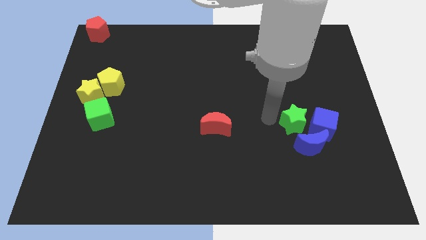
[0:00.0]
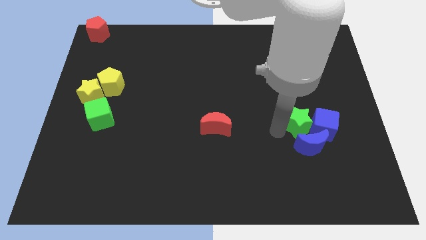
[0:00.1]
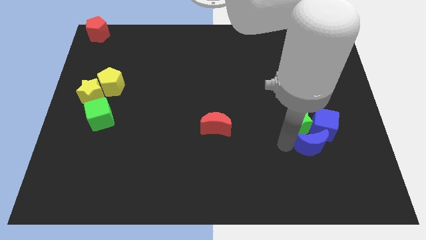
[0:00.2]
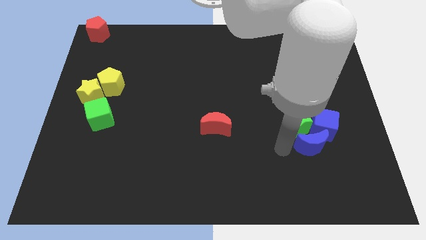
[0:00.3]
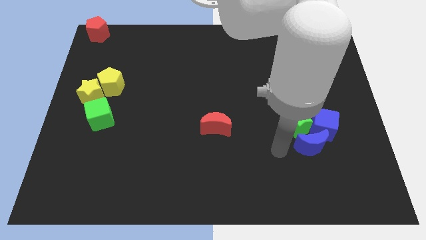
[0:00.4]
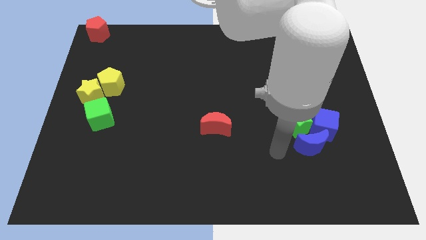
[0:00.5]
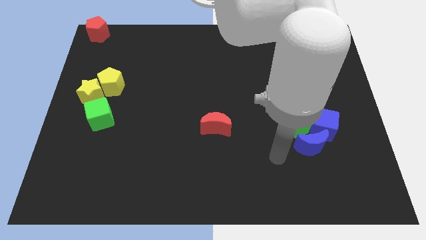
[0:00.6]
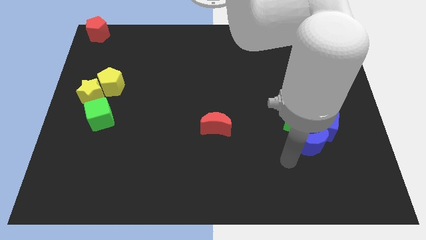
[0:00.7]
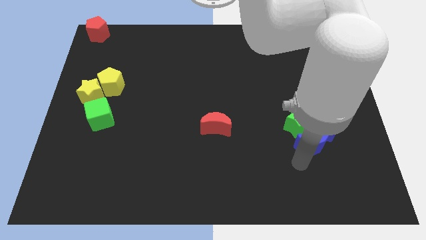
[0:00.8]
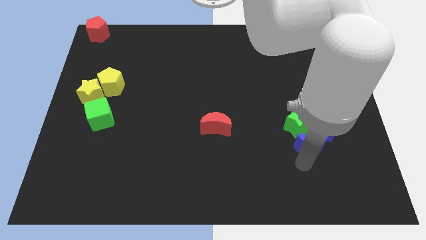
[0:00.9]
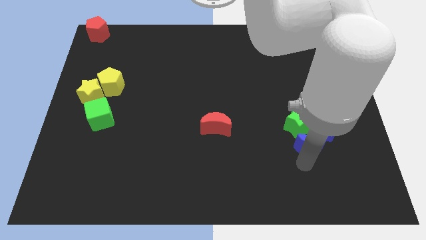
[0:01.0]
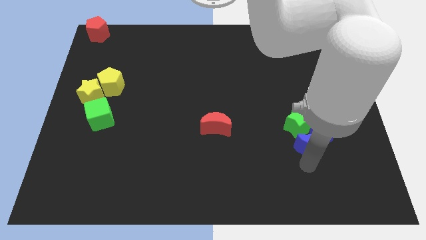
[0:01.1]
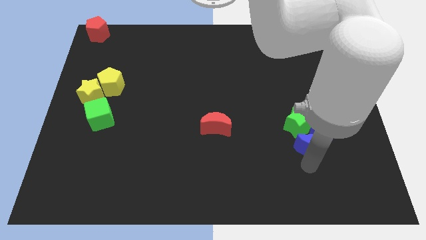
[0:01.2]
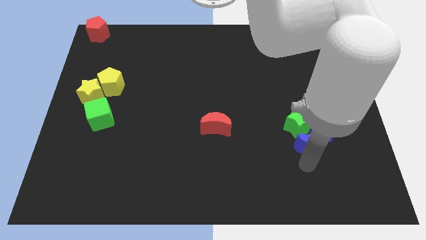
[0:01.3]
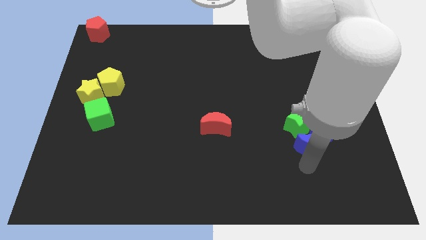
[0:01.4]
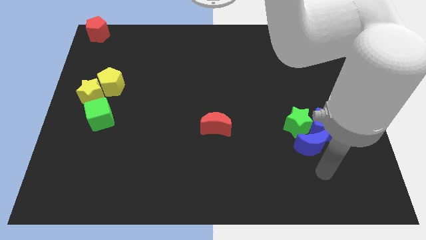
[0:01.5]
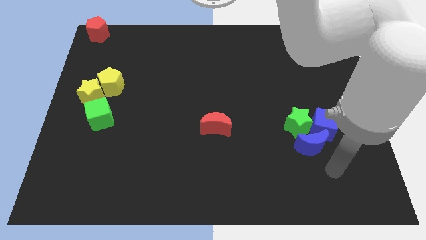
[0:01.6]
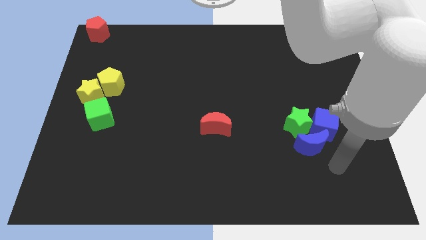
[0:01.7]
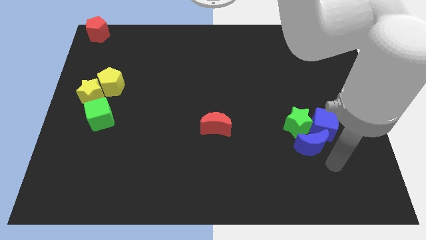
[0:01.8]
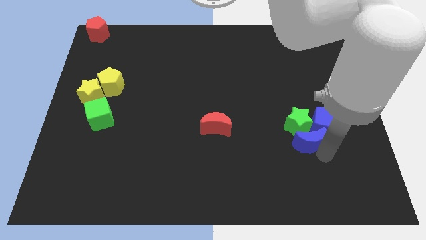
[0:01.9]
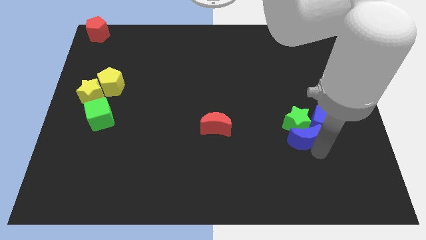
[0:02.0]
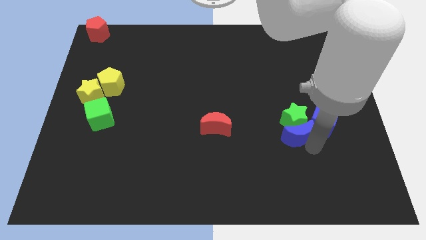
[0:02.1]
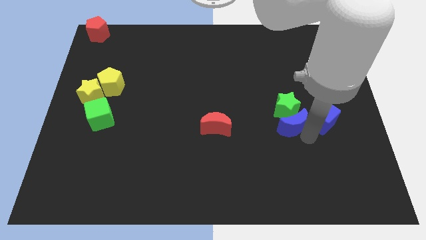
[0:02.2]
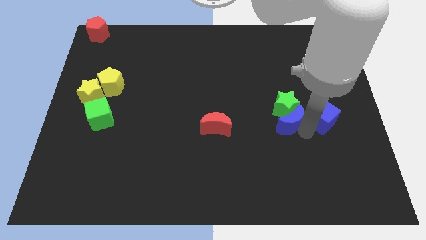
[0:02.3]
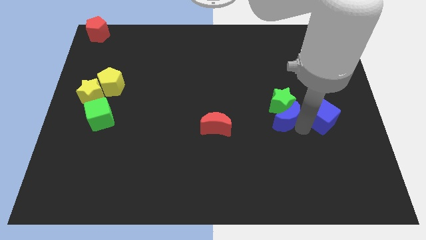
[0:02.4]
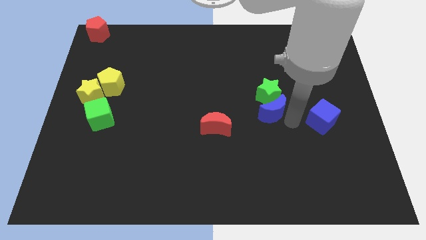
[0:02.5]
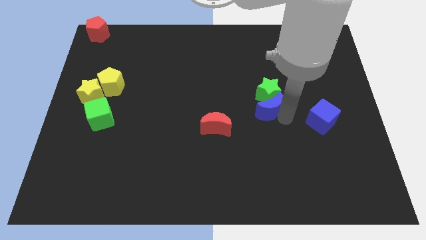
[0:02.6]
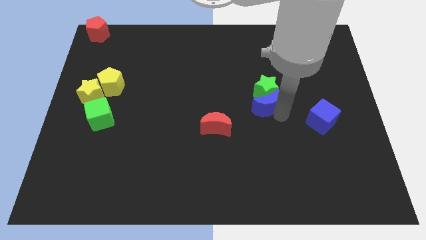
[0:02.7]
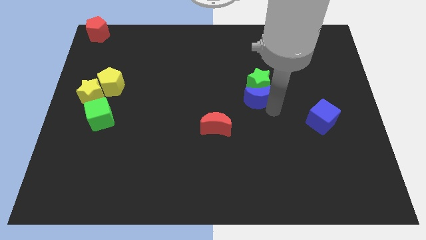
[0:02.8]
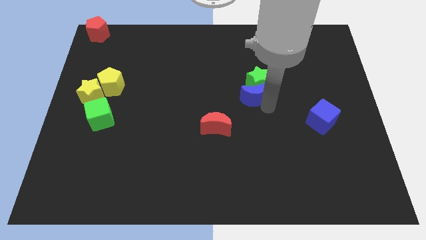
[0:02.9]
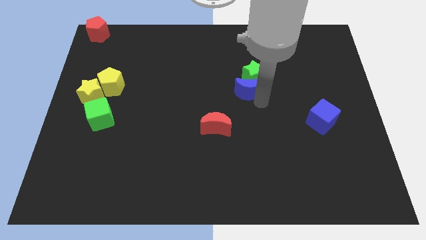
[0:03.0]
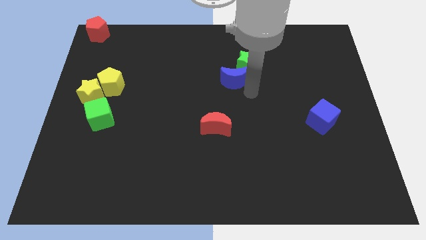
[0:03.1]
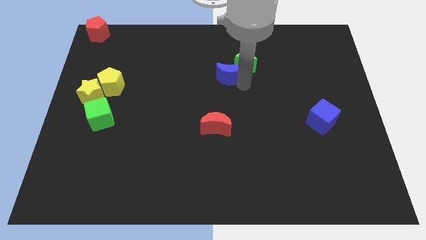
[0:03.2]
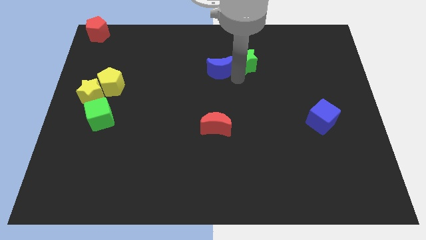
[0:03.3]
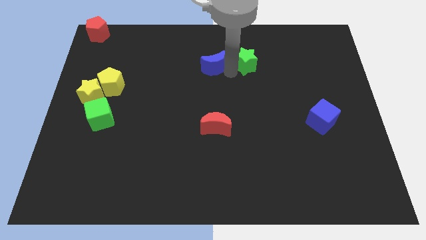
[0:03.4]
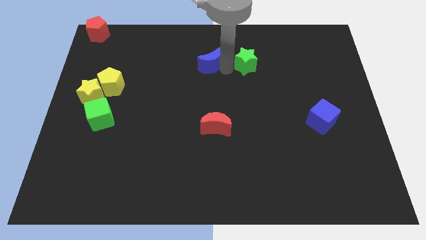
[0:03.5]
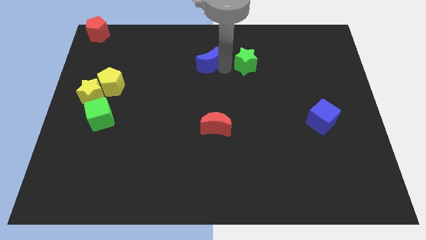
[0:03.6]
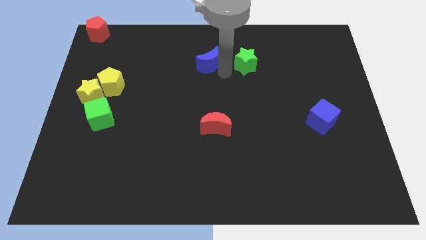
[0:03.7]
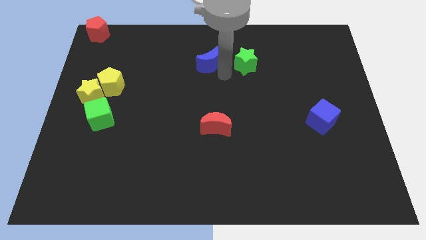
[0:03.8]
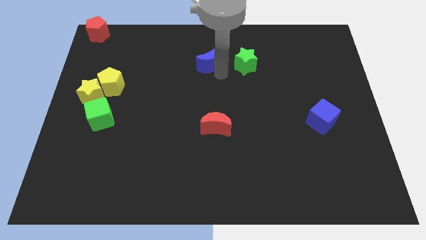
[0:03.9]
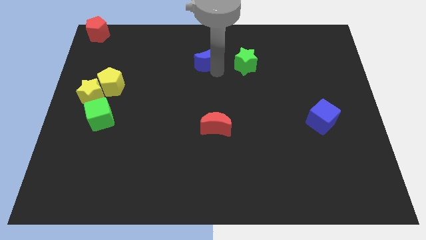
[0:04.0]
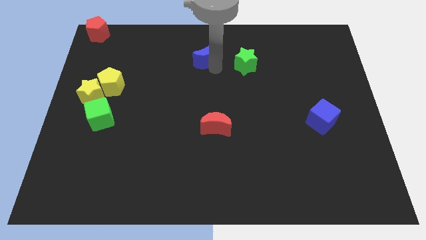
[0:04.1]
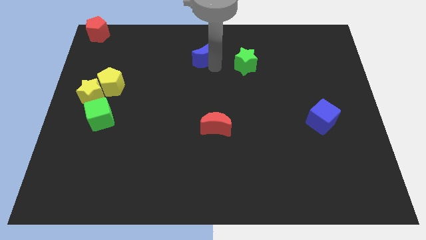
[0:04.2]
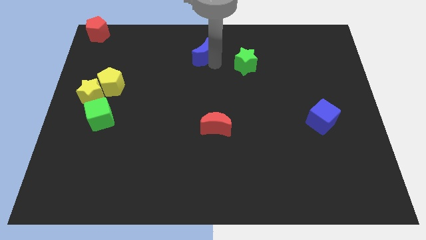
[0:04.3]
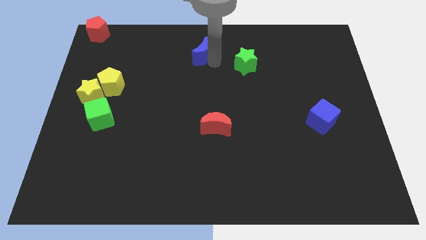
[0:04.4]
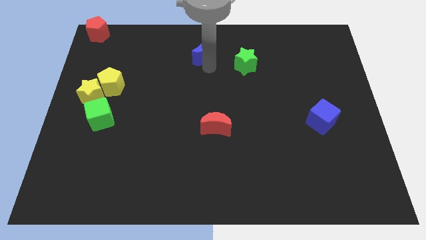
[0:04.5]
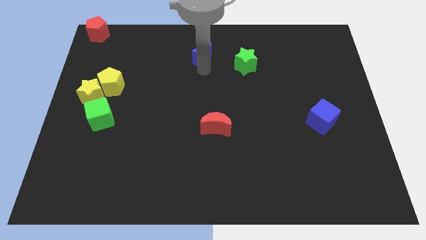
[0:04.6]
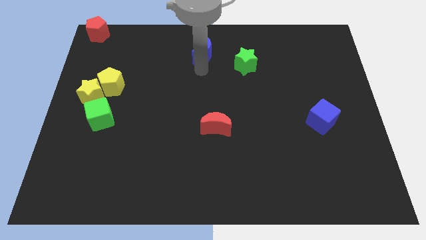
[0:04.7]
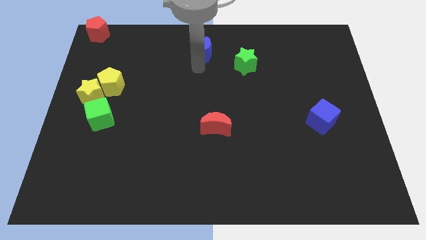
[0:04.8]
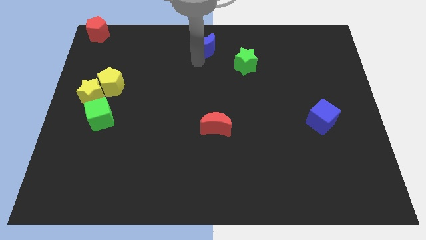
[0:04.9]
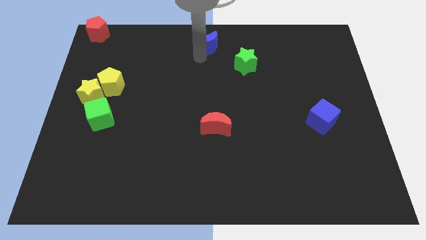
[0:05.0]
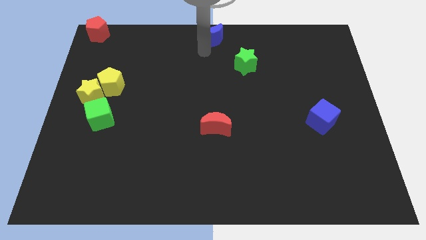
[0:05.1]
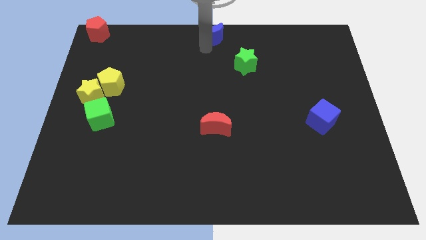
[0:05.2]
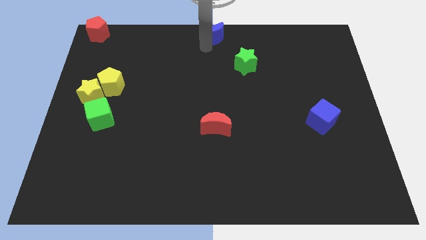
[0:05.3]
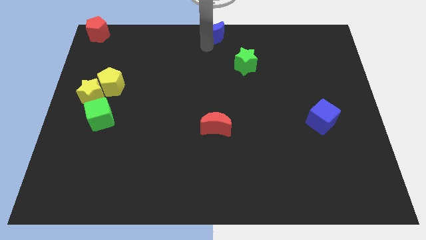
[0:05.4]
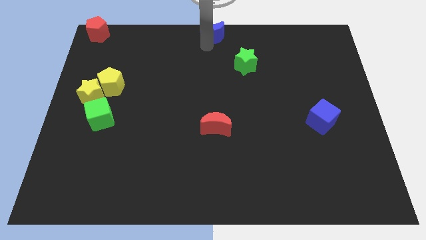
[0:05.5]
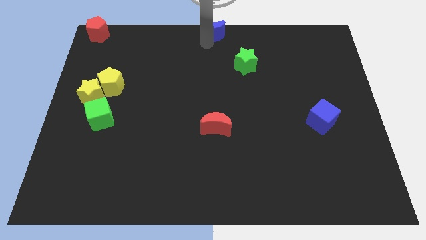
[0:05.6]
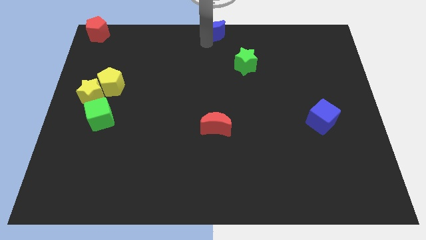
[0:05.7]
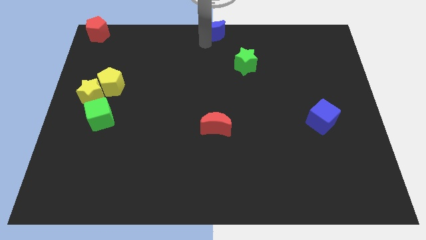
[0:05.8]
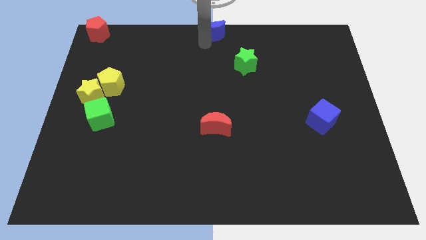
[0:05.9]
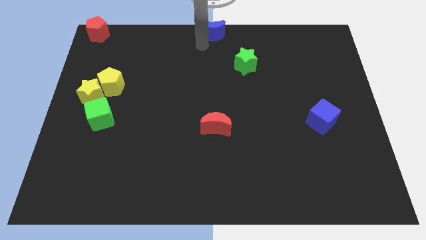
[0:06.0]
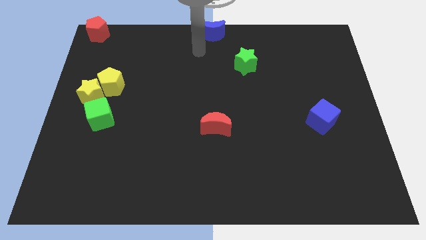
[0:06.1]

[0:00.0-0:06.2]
push the blue crescent to the center top of the board

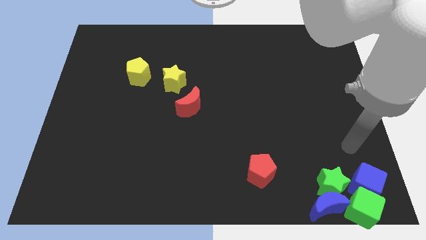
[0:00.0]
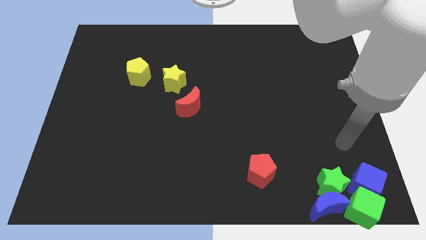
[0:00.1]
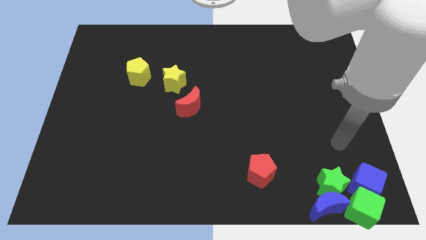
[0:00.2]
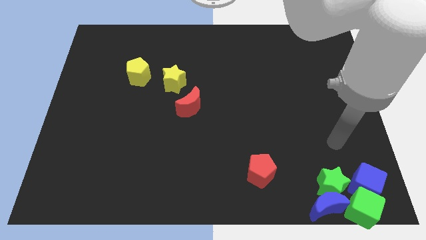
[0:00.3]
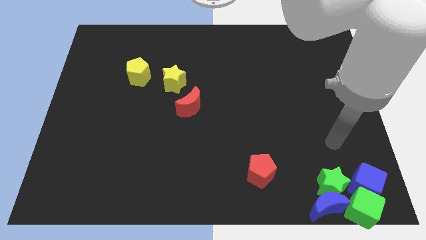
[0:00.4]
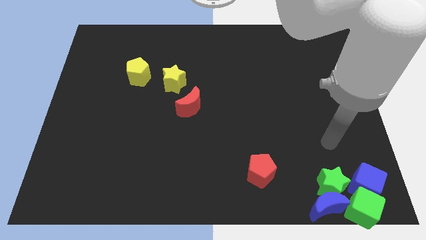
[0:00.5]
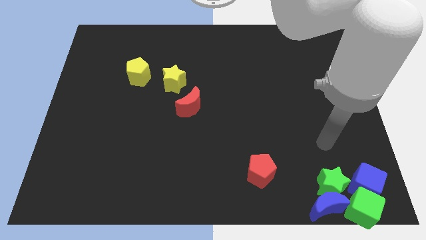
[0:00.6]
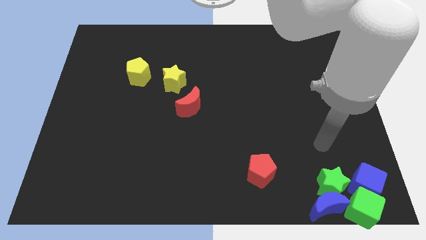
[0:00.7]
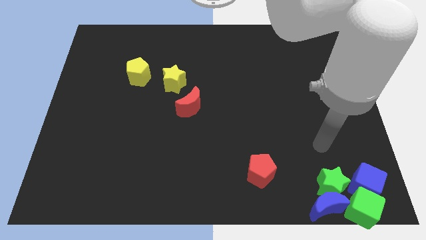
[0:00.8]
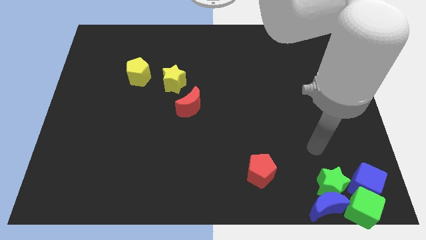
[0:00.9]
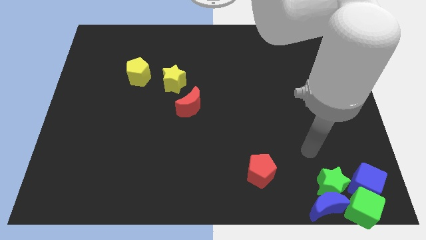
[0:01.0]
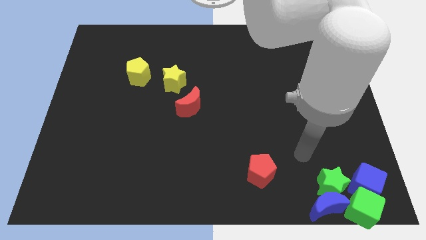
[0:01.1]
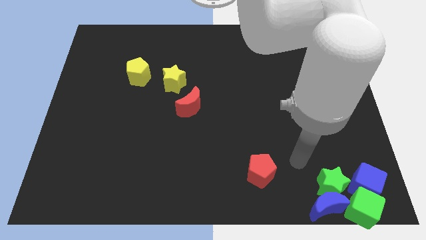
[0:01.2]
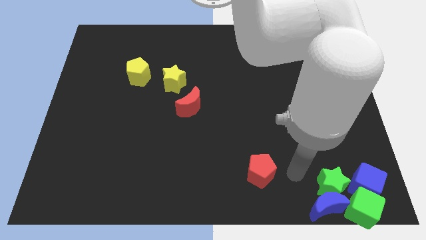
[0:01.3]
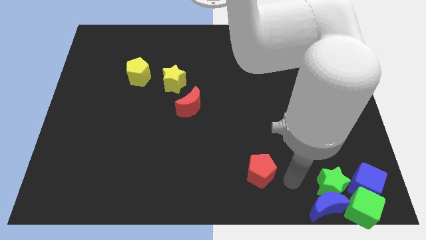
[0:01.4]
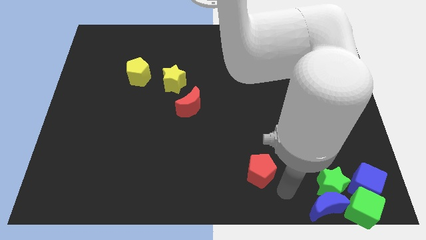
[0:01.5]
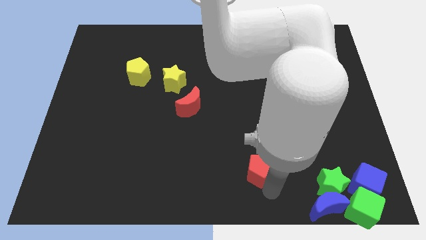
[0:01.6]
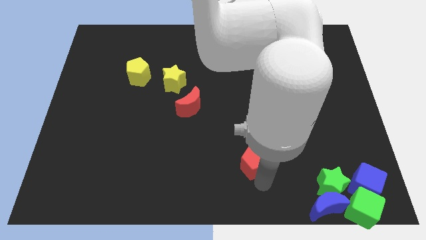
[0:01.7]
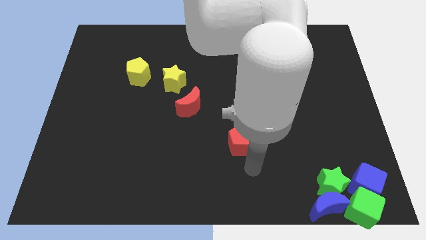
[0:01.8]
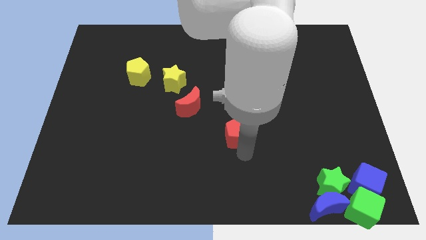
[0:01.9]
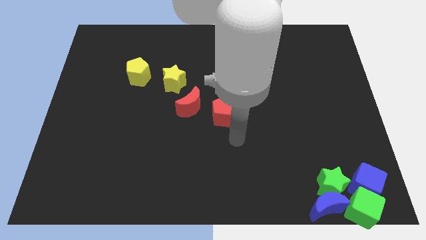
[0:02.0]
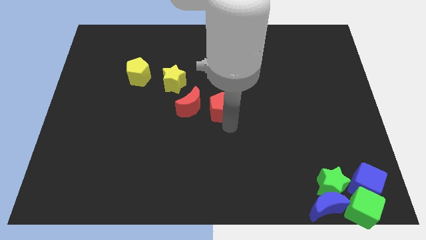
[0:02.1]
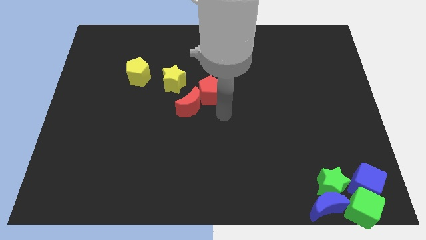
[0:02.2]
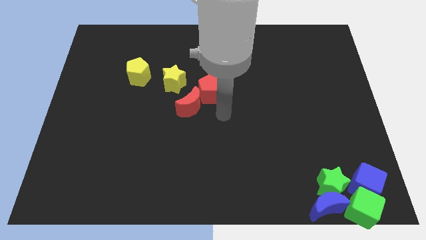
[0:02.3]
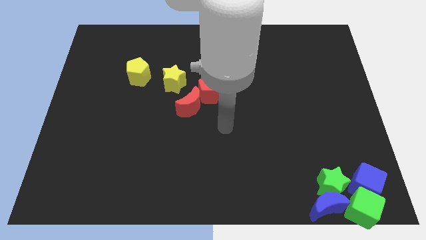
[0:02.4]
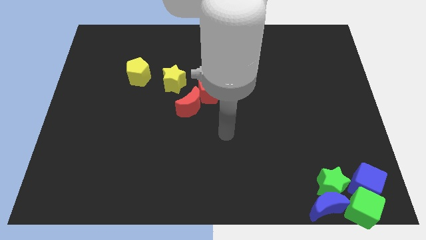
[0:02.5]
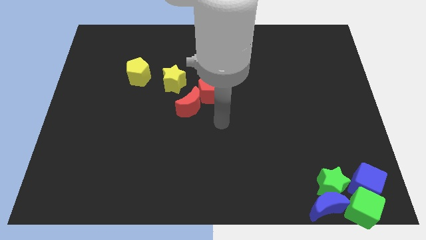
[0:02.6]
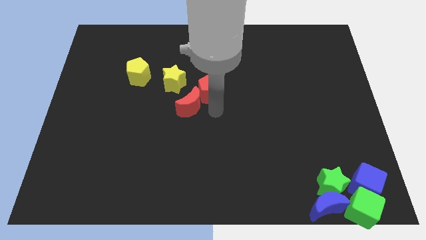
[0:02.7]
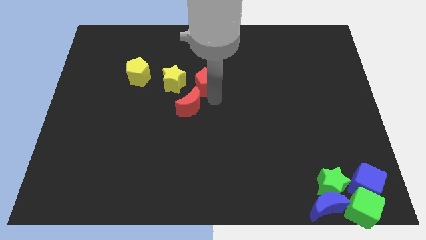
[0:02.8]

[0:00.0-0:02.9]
place the red pentagon to the top right of the red crescent
